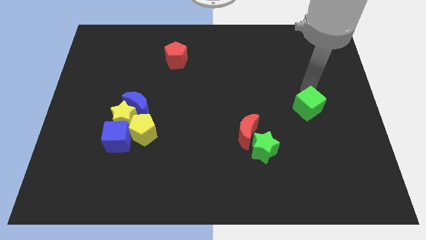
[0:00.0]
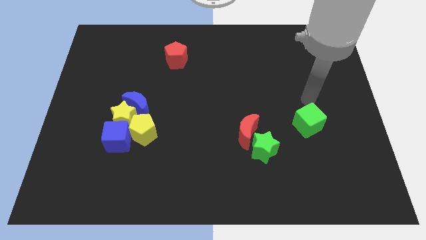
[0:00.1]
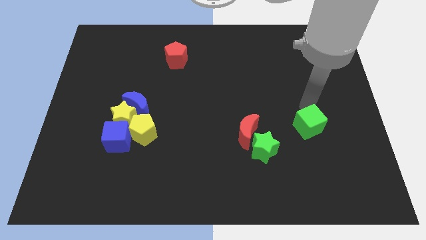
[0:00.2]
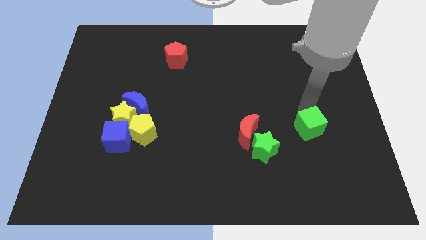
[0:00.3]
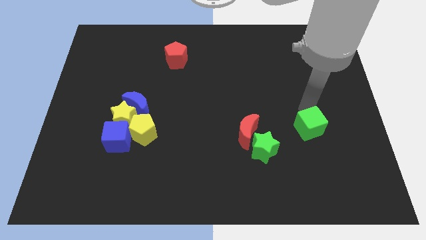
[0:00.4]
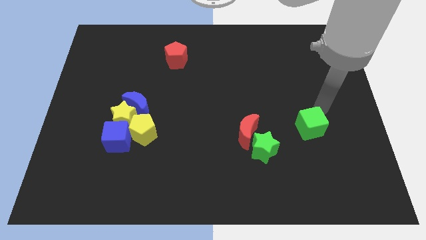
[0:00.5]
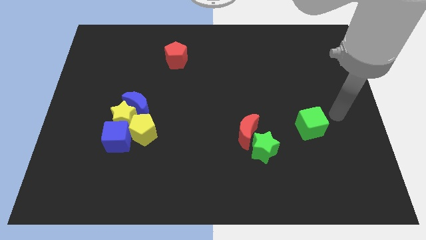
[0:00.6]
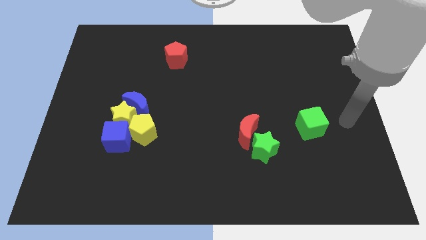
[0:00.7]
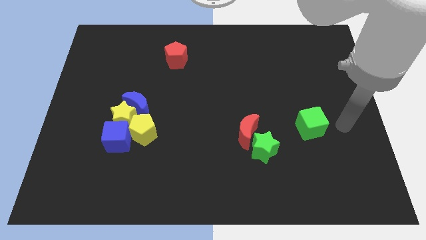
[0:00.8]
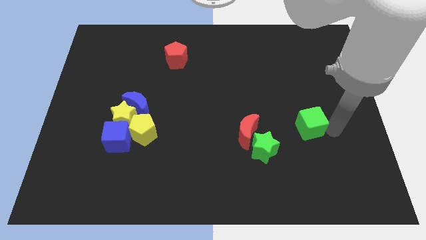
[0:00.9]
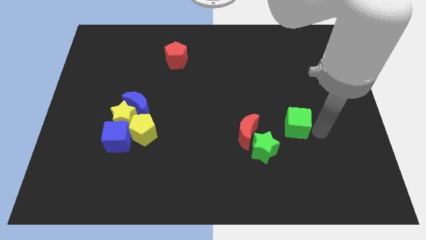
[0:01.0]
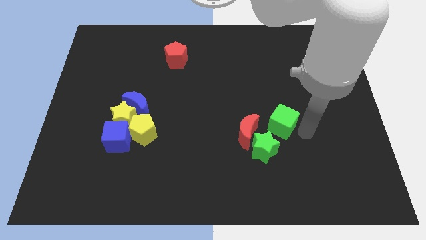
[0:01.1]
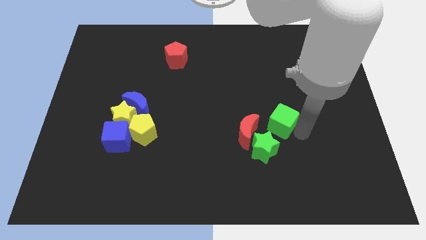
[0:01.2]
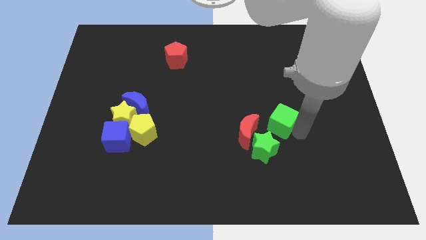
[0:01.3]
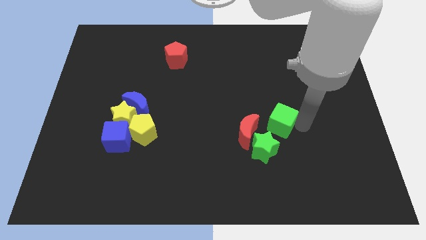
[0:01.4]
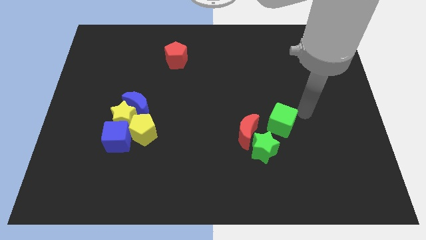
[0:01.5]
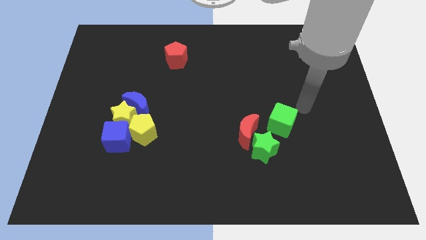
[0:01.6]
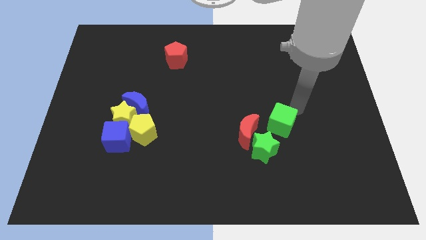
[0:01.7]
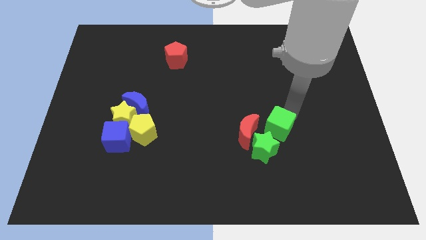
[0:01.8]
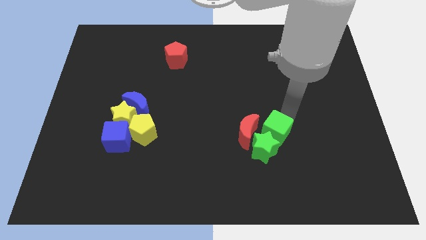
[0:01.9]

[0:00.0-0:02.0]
push the green cube into the green star

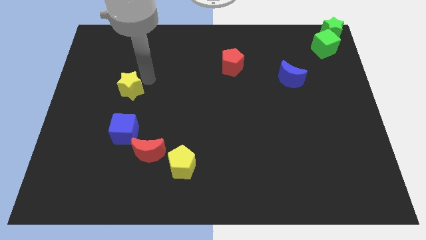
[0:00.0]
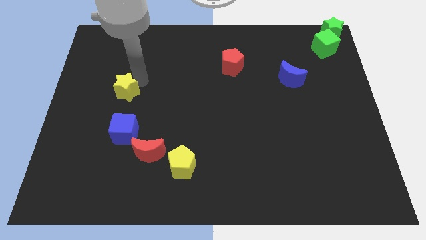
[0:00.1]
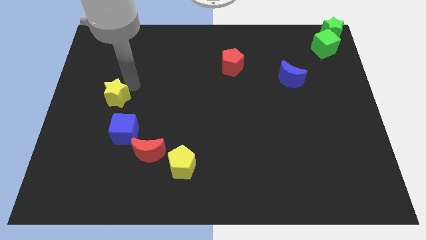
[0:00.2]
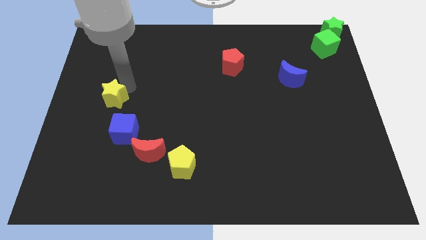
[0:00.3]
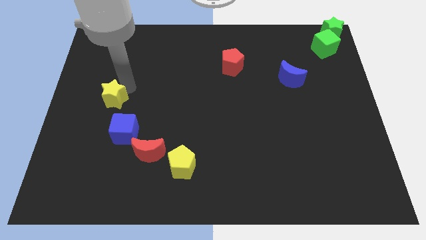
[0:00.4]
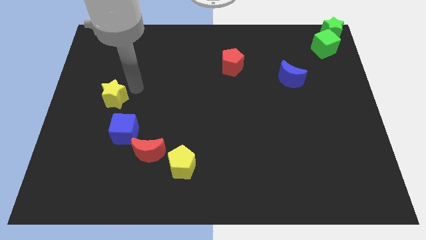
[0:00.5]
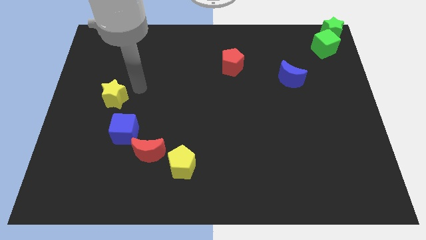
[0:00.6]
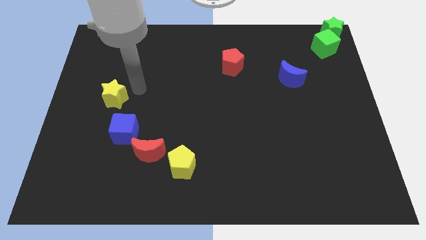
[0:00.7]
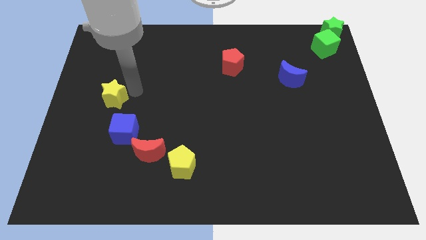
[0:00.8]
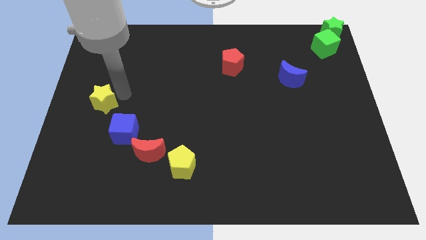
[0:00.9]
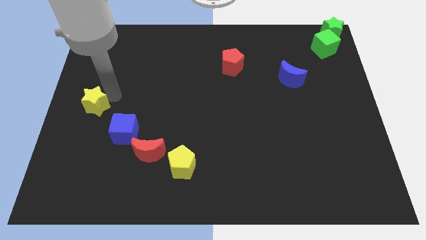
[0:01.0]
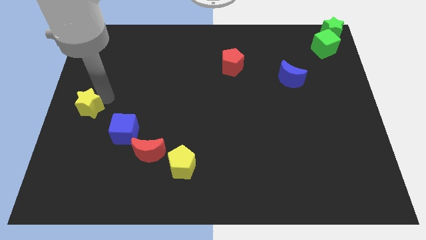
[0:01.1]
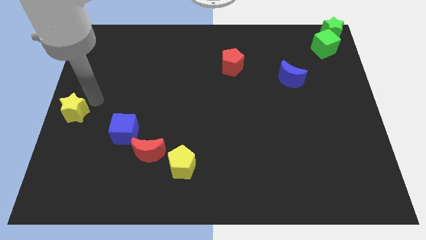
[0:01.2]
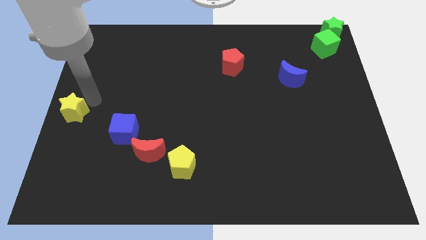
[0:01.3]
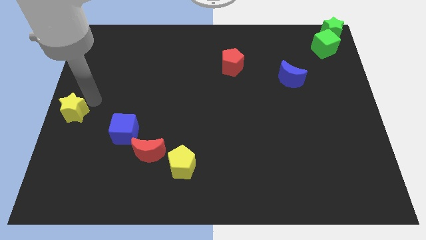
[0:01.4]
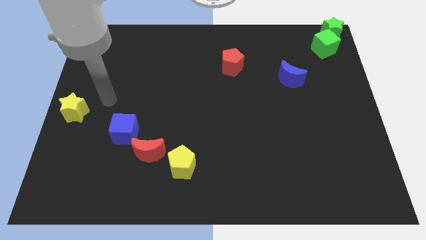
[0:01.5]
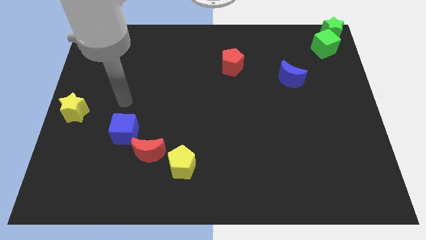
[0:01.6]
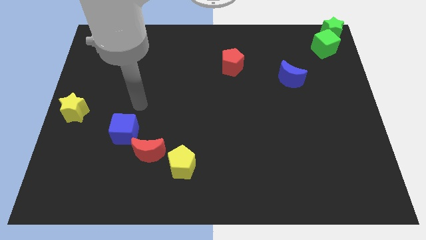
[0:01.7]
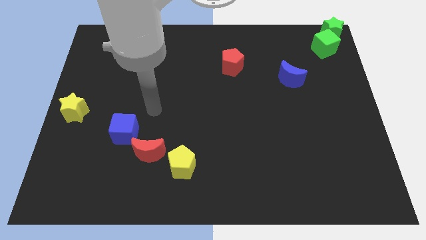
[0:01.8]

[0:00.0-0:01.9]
push the yellow star towards the left side of the board

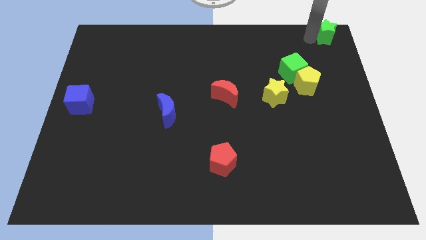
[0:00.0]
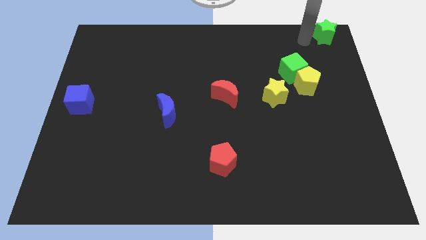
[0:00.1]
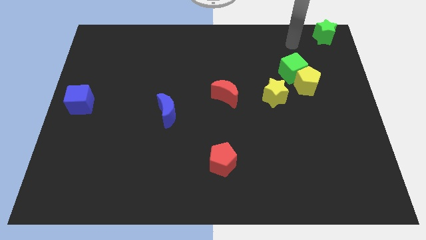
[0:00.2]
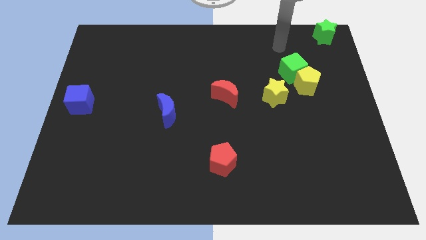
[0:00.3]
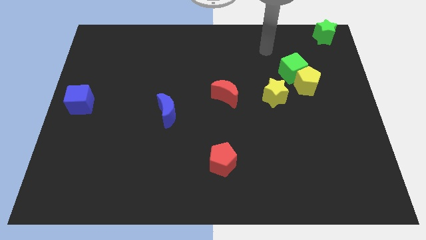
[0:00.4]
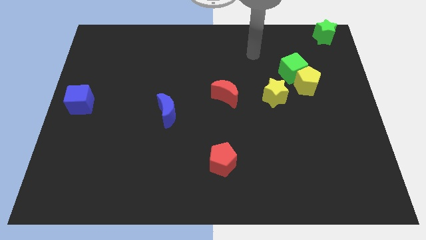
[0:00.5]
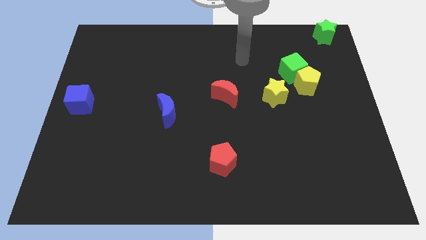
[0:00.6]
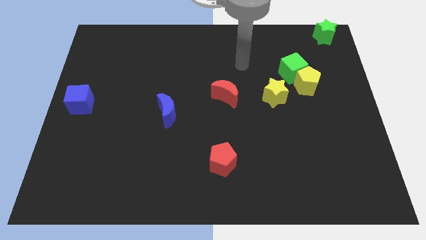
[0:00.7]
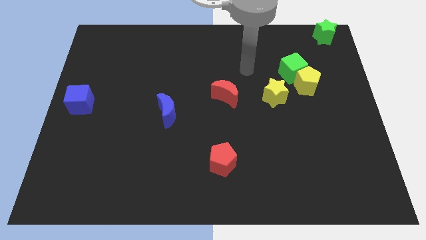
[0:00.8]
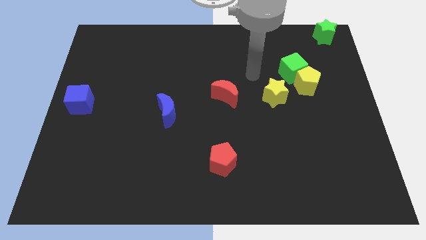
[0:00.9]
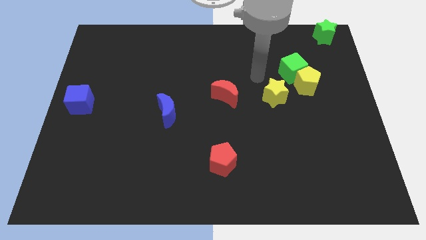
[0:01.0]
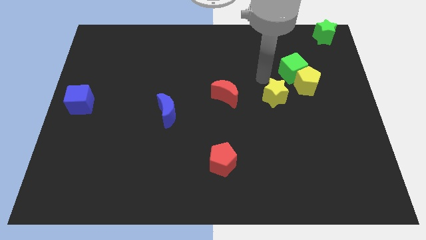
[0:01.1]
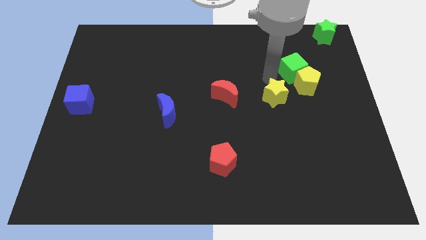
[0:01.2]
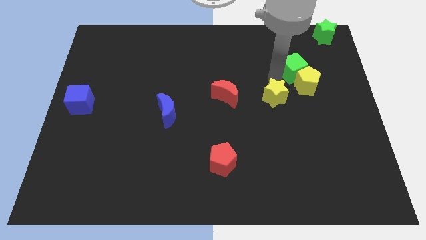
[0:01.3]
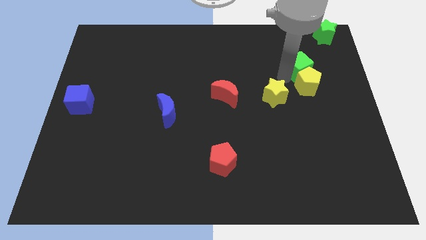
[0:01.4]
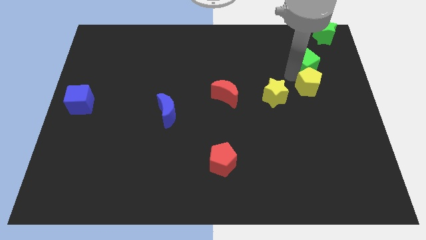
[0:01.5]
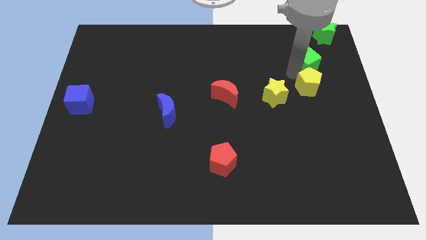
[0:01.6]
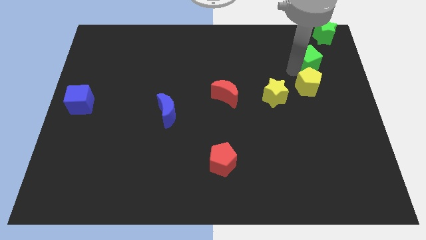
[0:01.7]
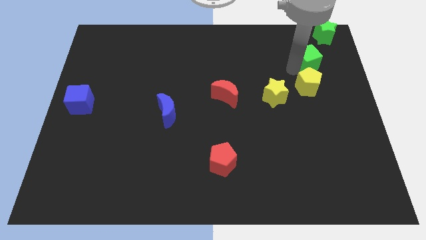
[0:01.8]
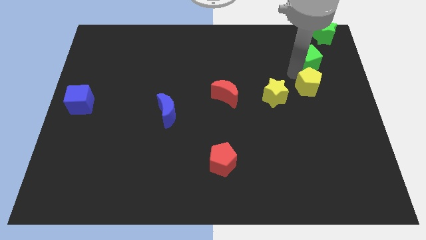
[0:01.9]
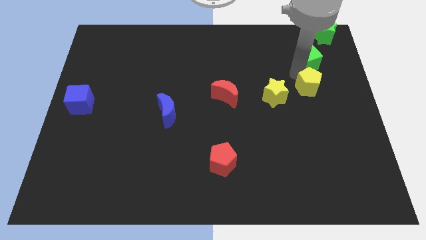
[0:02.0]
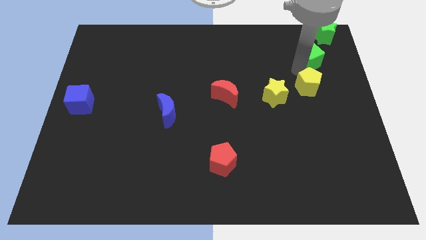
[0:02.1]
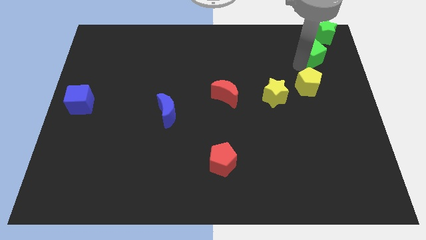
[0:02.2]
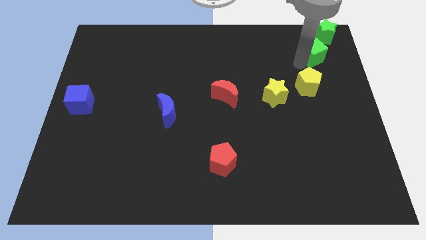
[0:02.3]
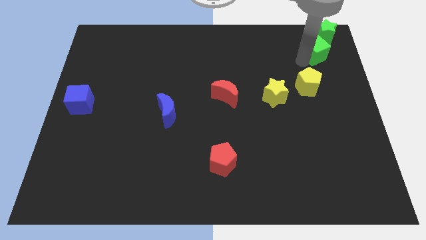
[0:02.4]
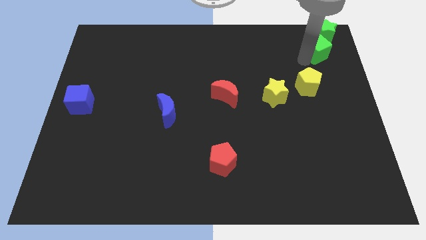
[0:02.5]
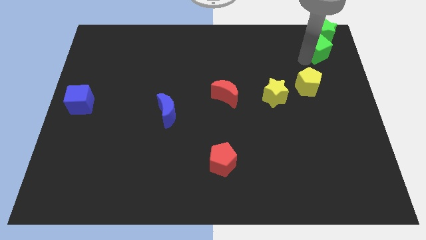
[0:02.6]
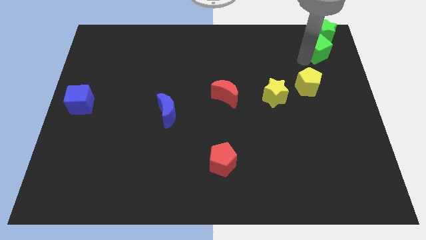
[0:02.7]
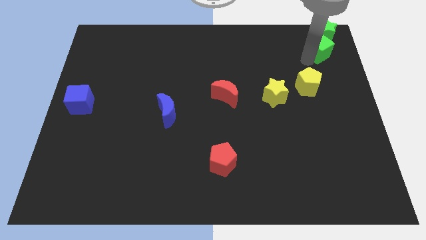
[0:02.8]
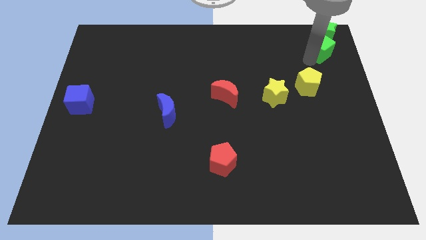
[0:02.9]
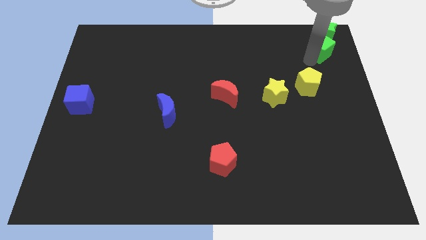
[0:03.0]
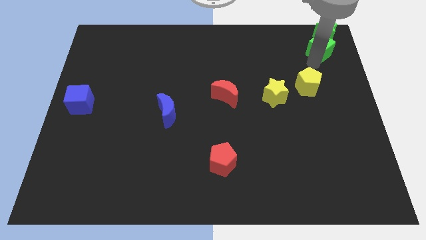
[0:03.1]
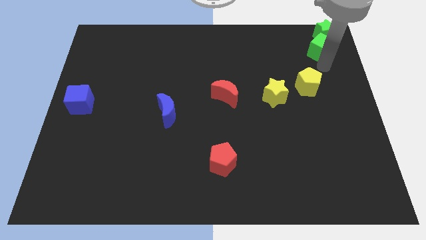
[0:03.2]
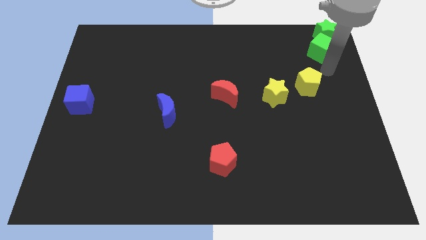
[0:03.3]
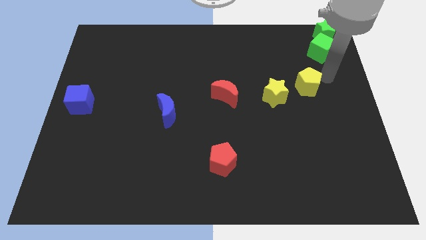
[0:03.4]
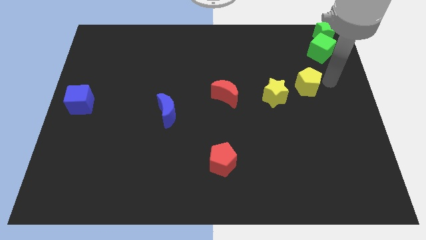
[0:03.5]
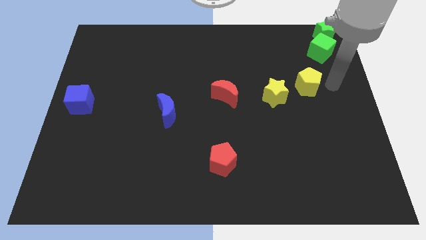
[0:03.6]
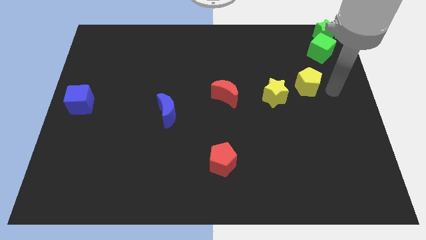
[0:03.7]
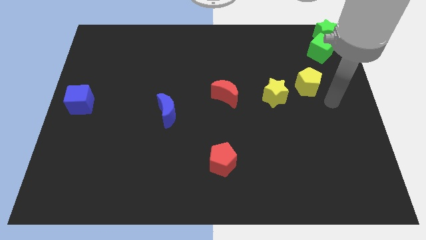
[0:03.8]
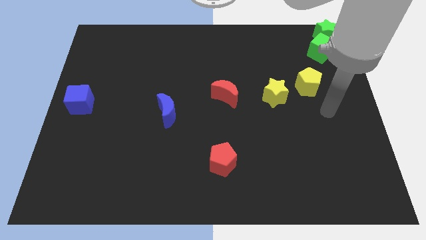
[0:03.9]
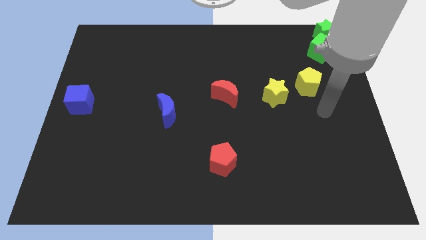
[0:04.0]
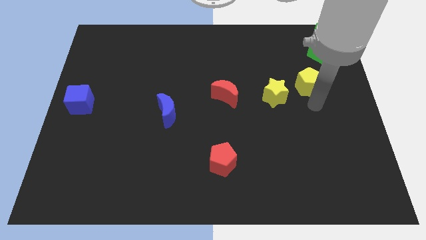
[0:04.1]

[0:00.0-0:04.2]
place the green cube in between the yellow pentagon and green star

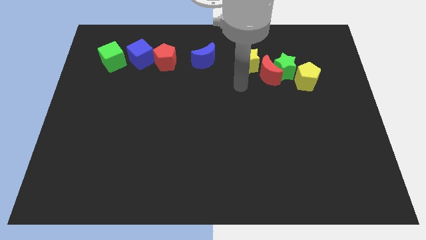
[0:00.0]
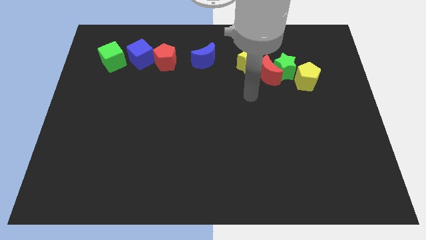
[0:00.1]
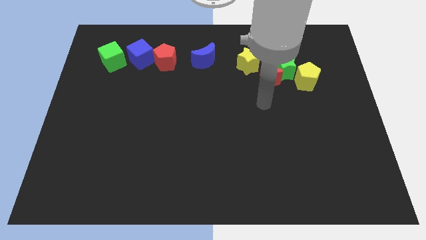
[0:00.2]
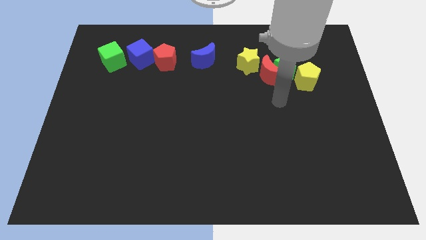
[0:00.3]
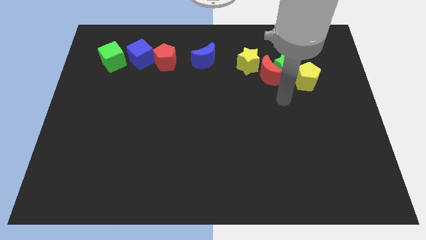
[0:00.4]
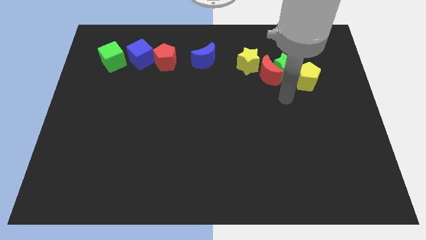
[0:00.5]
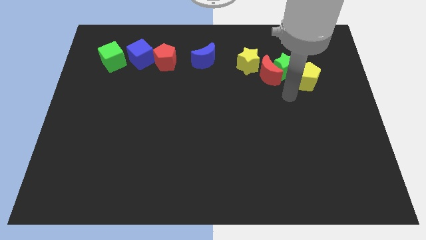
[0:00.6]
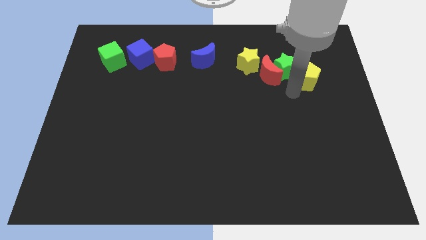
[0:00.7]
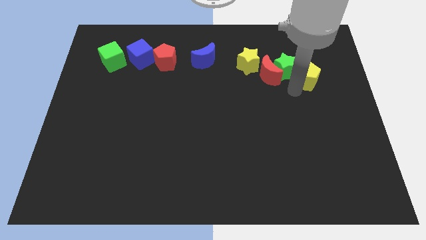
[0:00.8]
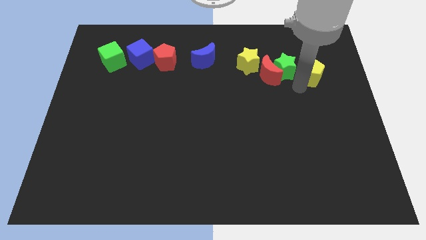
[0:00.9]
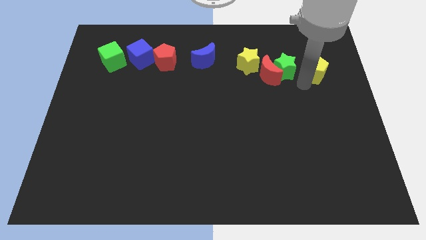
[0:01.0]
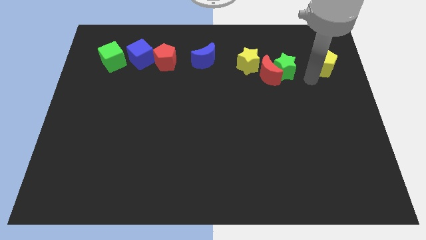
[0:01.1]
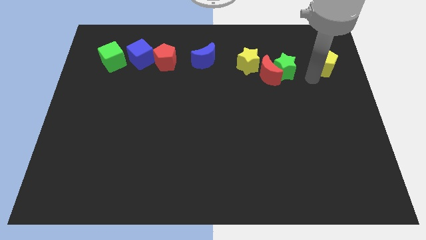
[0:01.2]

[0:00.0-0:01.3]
push the yellow pentagon to the right of green star
